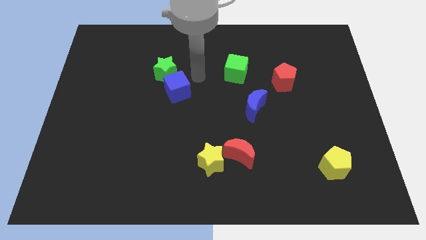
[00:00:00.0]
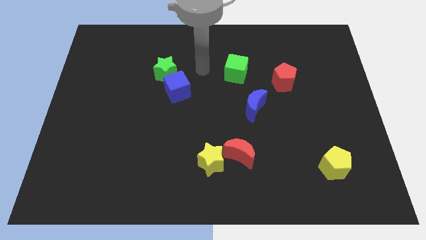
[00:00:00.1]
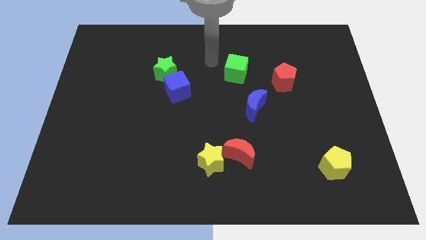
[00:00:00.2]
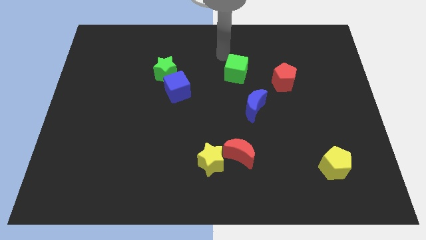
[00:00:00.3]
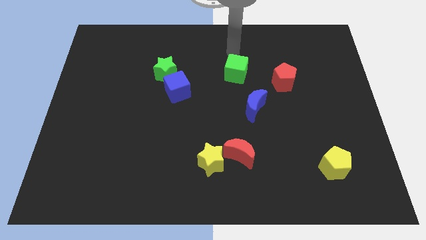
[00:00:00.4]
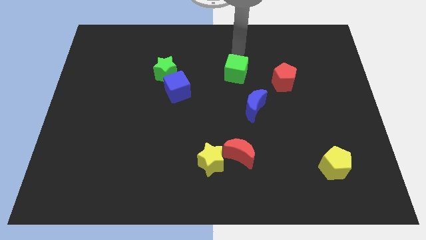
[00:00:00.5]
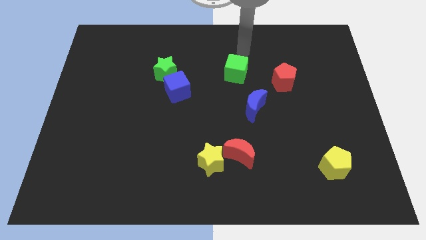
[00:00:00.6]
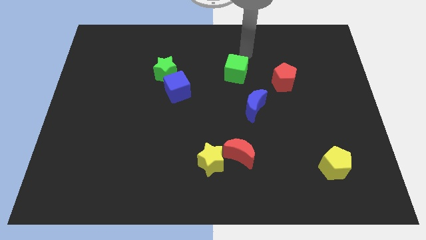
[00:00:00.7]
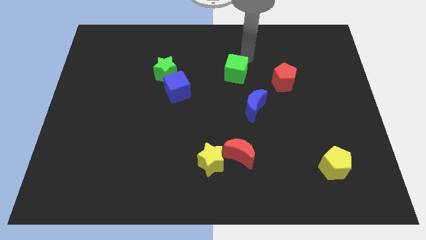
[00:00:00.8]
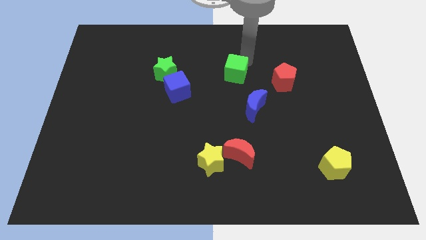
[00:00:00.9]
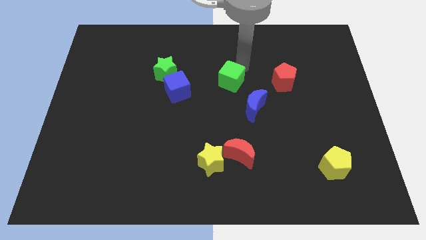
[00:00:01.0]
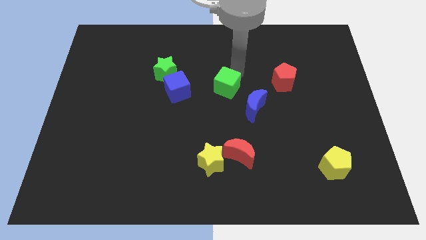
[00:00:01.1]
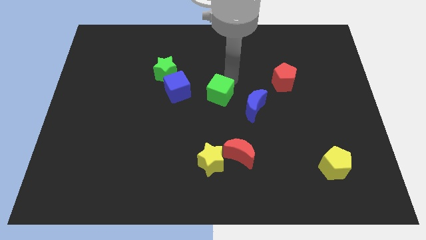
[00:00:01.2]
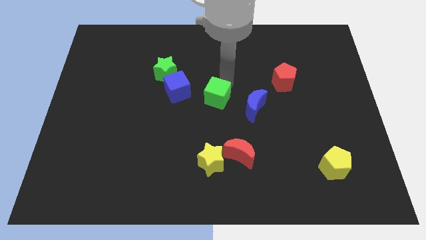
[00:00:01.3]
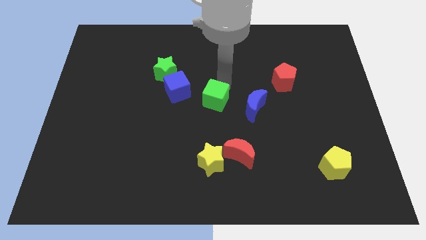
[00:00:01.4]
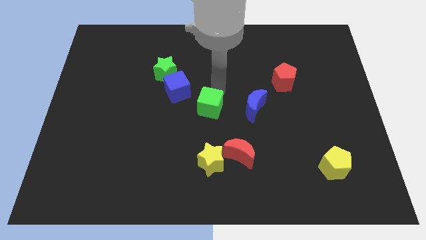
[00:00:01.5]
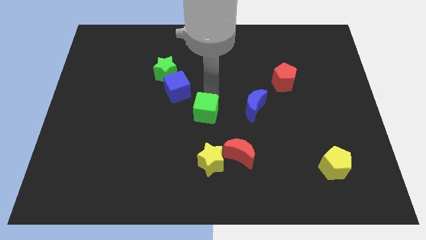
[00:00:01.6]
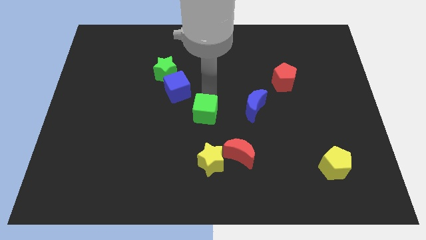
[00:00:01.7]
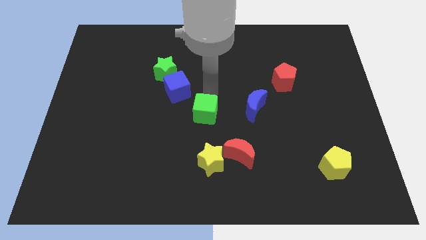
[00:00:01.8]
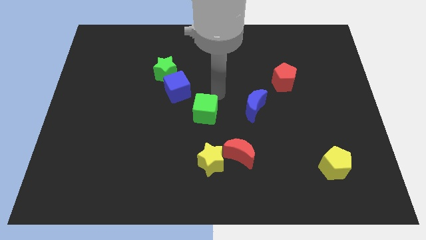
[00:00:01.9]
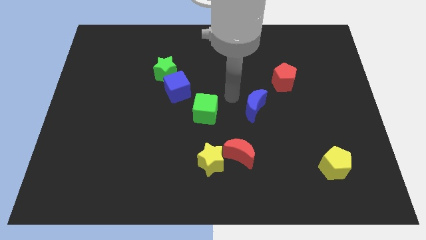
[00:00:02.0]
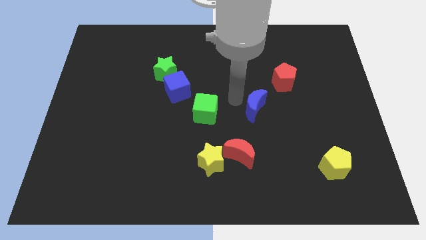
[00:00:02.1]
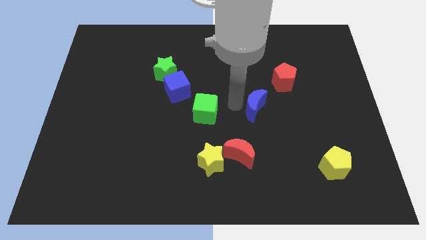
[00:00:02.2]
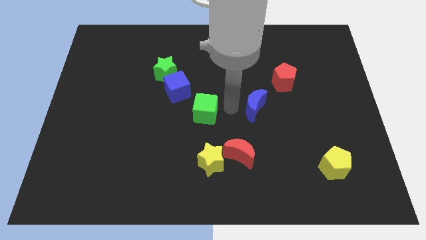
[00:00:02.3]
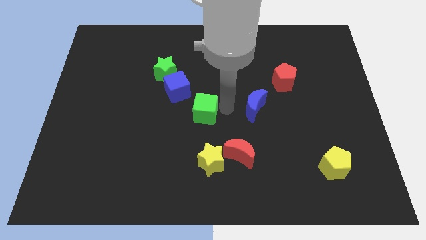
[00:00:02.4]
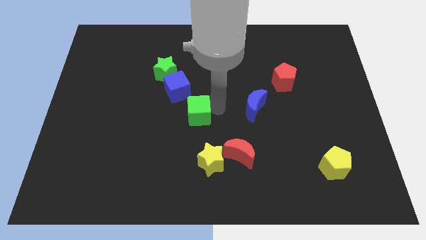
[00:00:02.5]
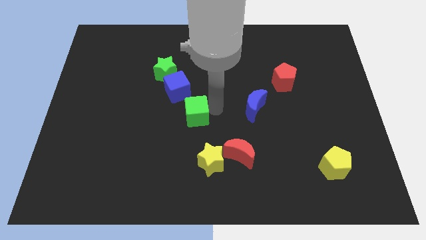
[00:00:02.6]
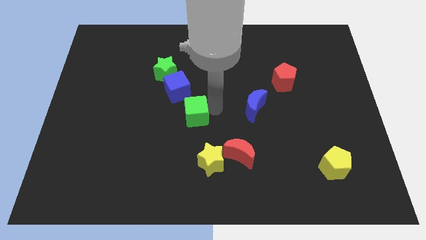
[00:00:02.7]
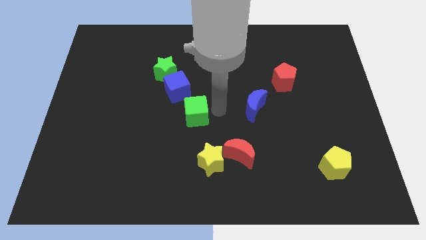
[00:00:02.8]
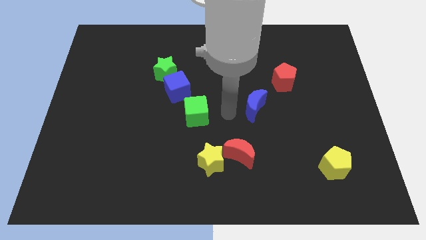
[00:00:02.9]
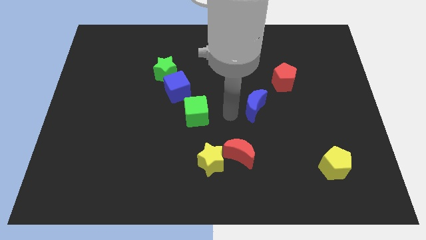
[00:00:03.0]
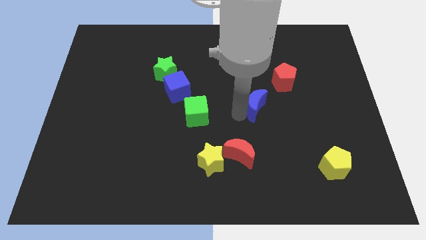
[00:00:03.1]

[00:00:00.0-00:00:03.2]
place green cube to the top of yellow star

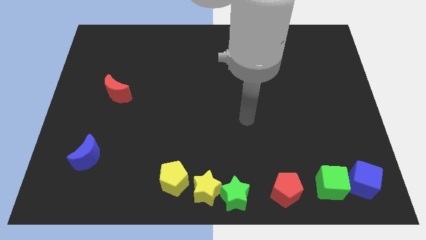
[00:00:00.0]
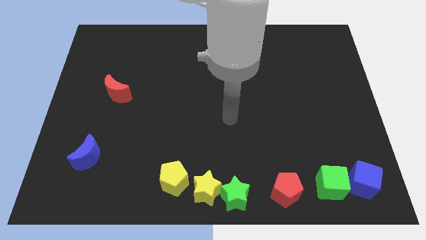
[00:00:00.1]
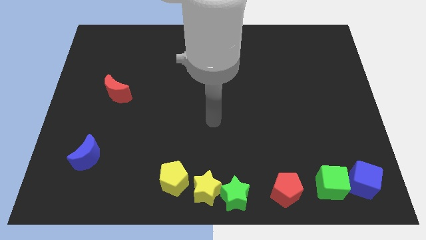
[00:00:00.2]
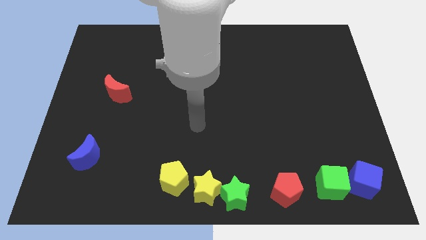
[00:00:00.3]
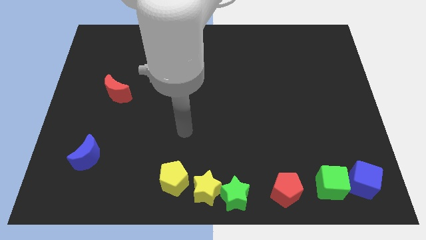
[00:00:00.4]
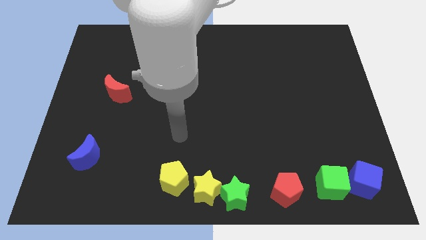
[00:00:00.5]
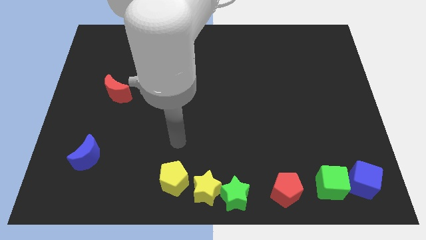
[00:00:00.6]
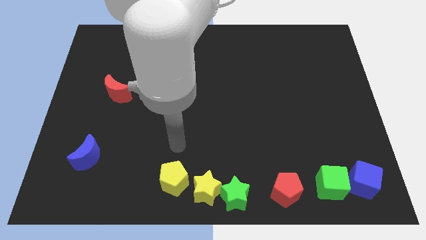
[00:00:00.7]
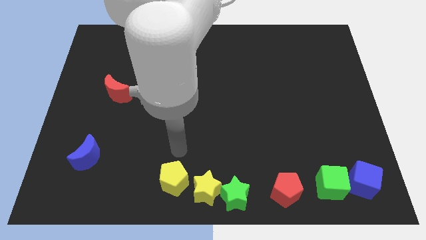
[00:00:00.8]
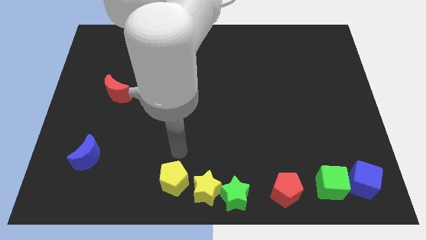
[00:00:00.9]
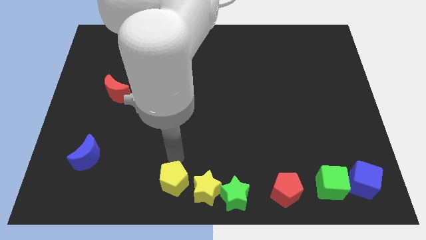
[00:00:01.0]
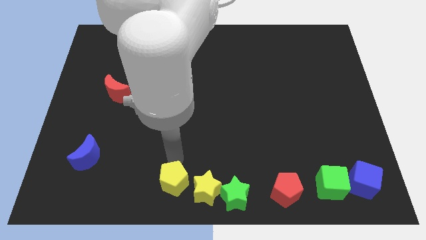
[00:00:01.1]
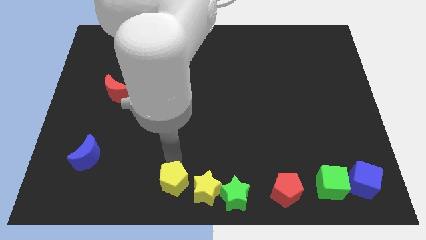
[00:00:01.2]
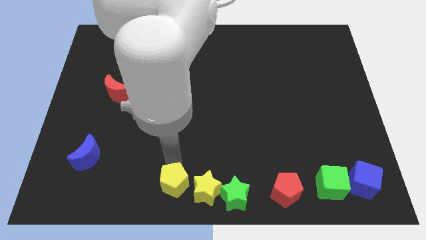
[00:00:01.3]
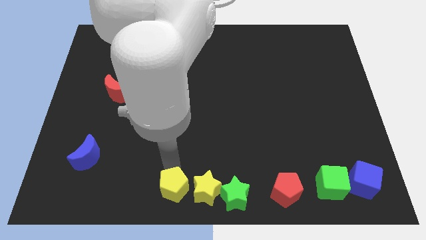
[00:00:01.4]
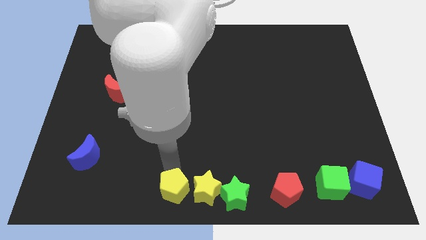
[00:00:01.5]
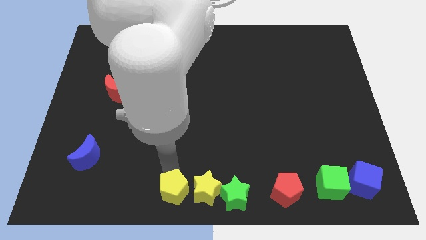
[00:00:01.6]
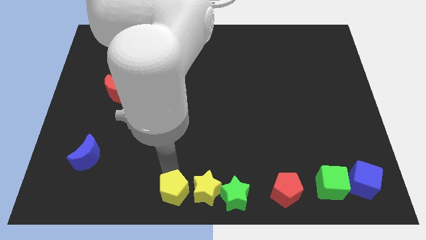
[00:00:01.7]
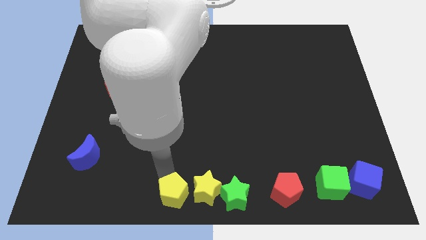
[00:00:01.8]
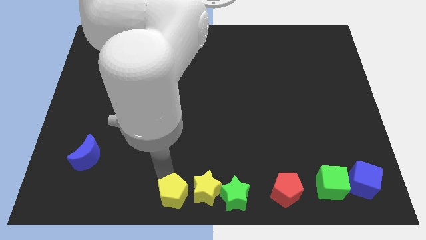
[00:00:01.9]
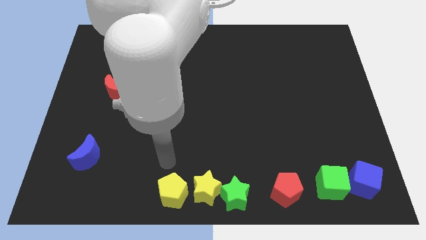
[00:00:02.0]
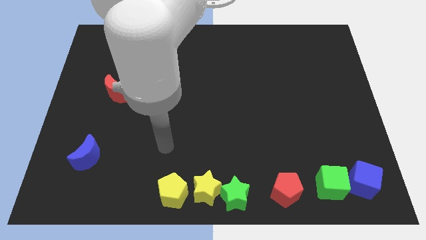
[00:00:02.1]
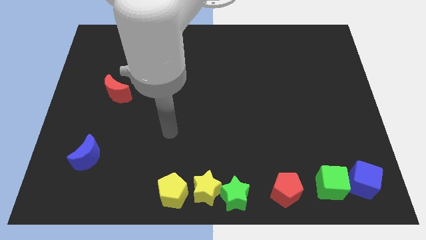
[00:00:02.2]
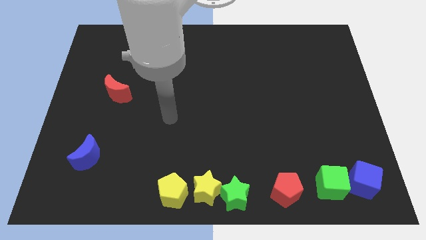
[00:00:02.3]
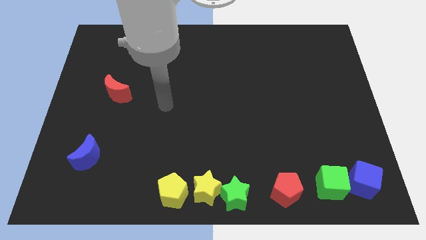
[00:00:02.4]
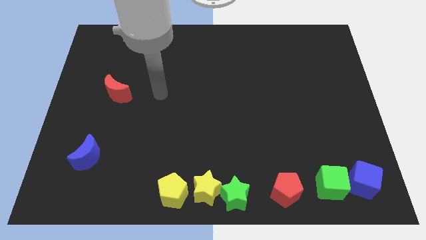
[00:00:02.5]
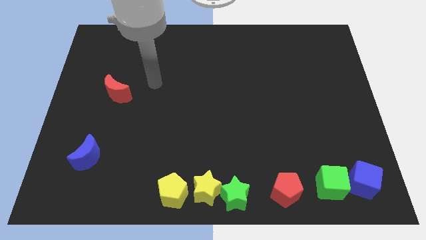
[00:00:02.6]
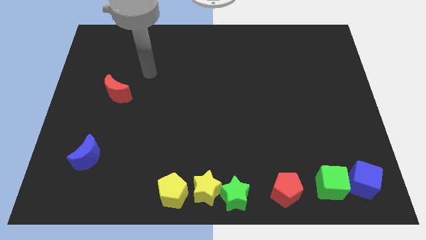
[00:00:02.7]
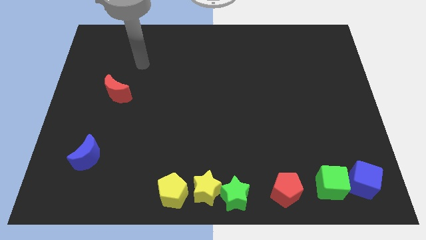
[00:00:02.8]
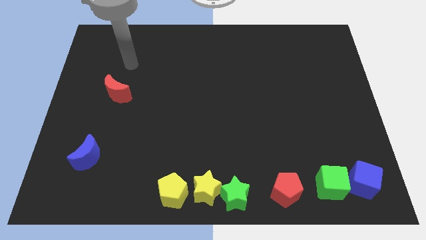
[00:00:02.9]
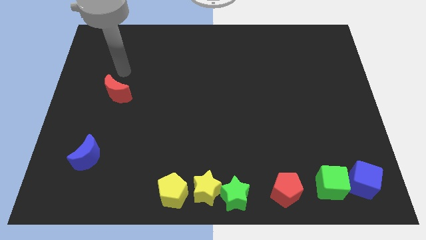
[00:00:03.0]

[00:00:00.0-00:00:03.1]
push the yellow pentagon slightly to the down

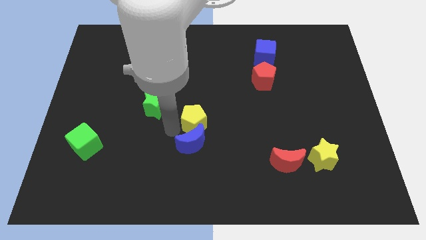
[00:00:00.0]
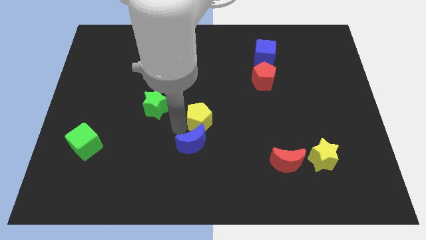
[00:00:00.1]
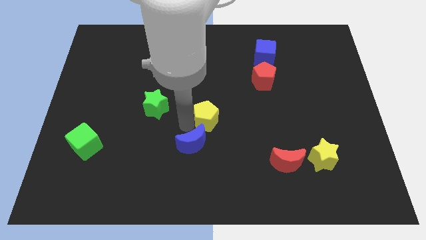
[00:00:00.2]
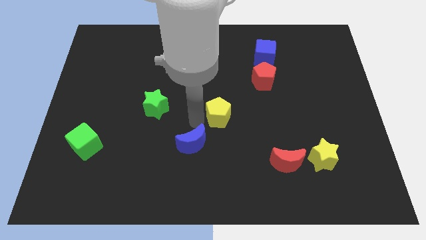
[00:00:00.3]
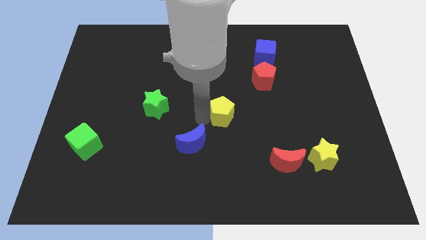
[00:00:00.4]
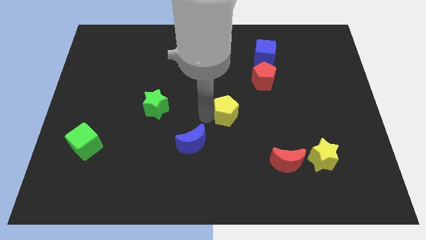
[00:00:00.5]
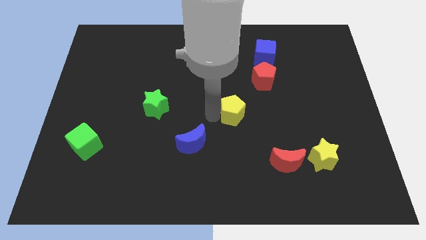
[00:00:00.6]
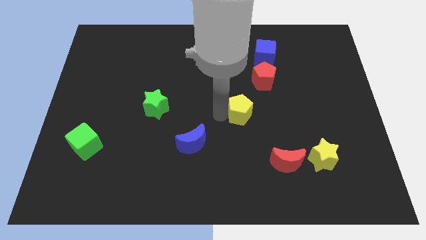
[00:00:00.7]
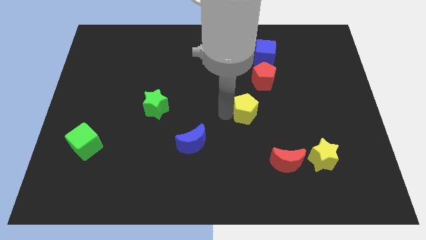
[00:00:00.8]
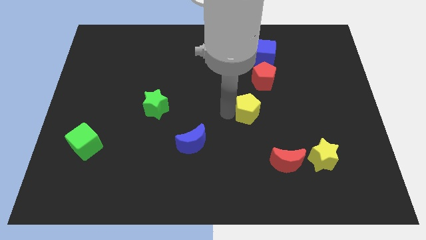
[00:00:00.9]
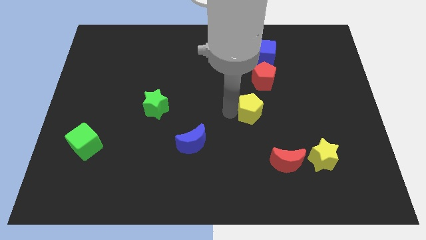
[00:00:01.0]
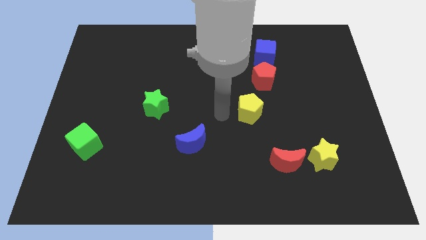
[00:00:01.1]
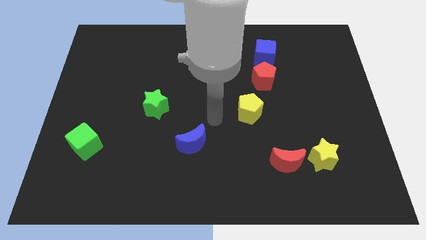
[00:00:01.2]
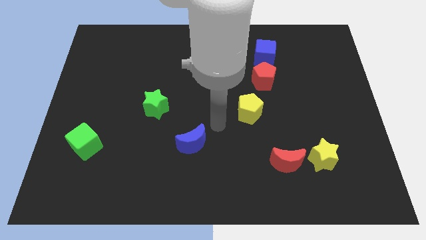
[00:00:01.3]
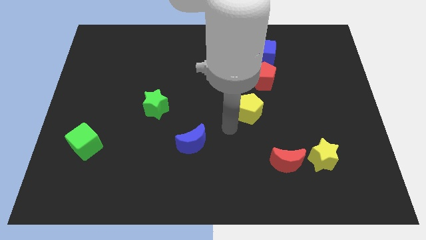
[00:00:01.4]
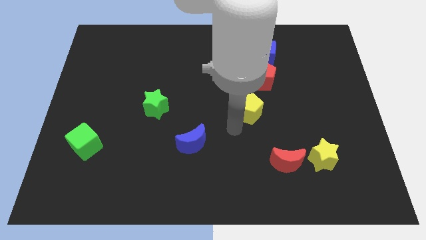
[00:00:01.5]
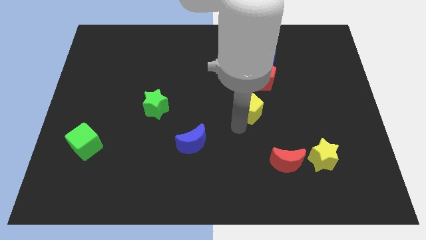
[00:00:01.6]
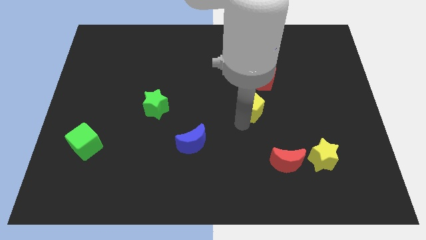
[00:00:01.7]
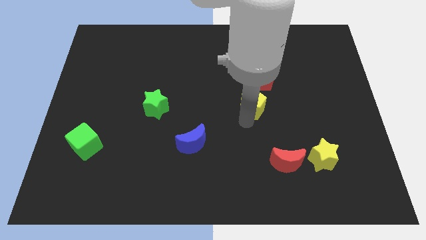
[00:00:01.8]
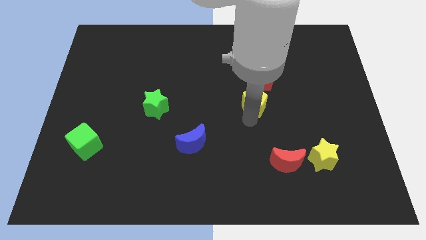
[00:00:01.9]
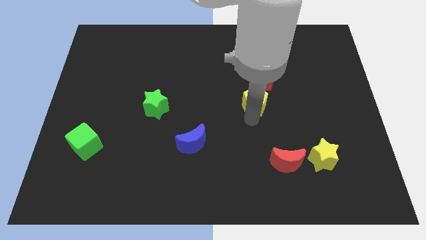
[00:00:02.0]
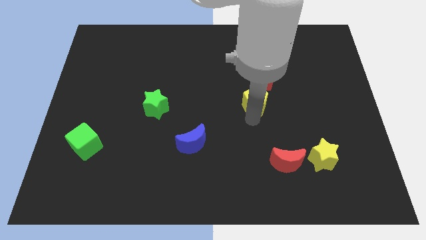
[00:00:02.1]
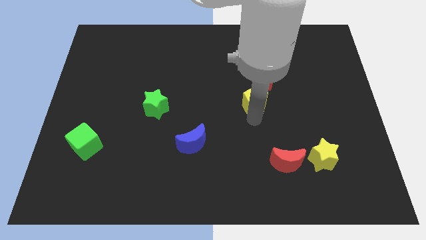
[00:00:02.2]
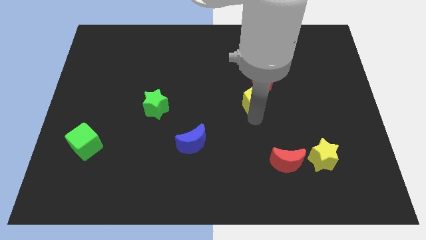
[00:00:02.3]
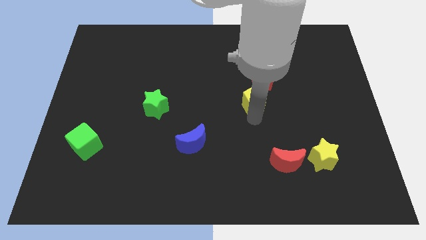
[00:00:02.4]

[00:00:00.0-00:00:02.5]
place the yellow pentagon below the red pentagon
